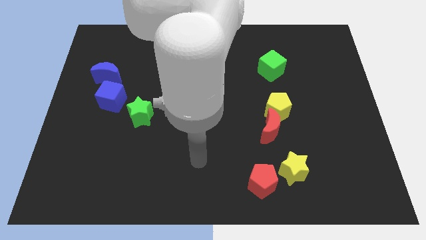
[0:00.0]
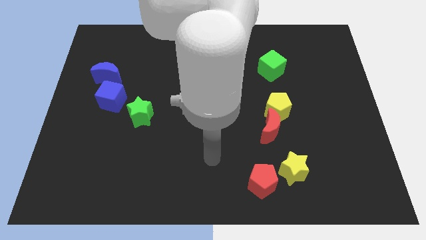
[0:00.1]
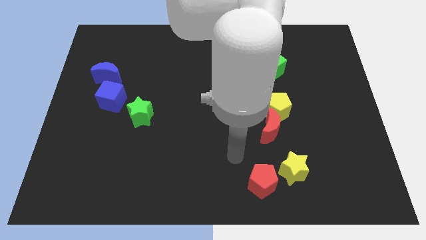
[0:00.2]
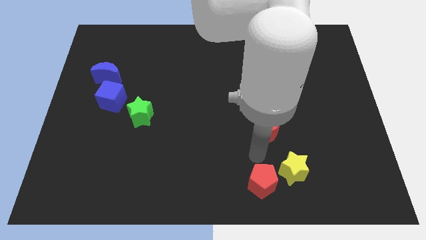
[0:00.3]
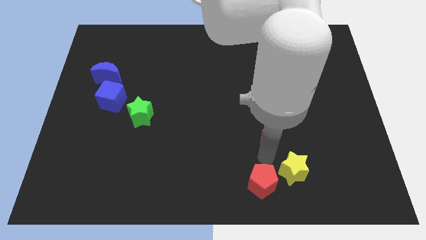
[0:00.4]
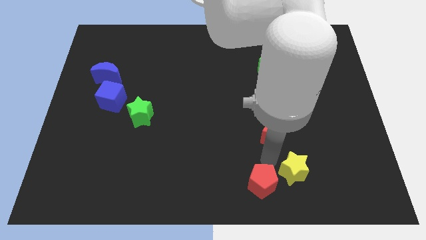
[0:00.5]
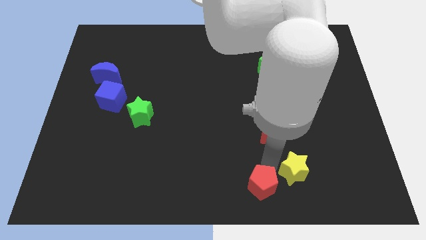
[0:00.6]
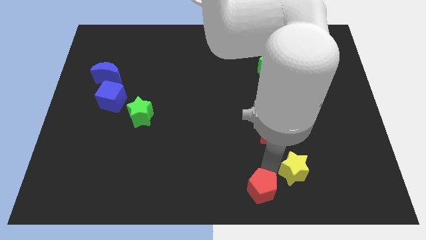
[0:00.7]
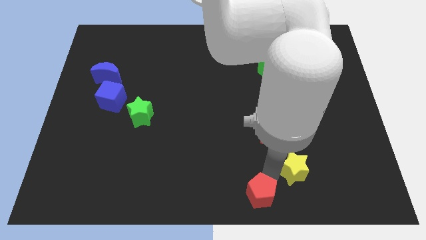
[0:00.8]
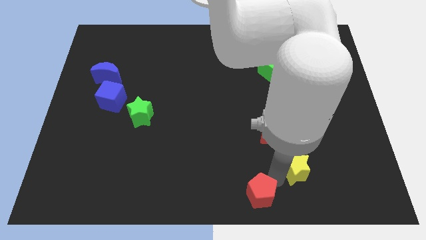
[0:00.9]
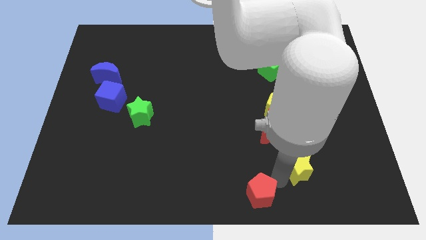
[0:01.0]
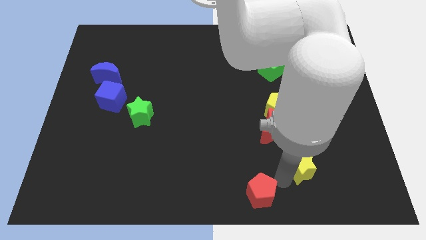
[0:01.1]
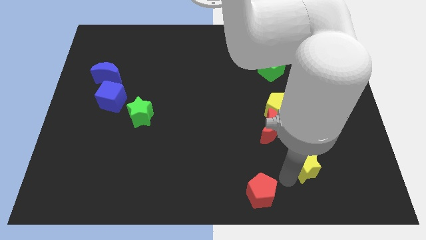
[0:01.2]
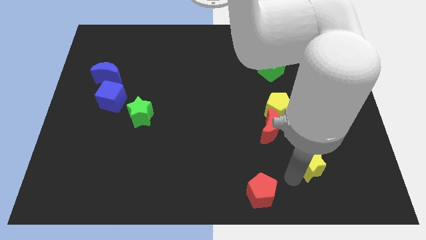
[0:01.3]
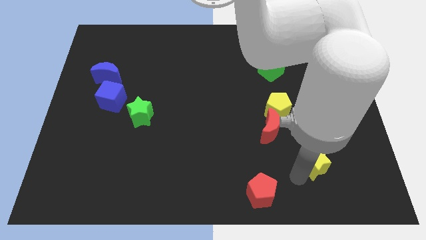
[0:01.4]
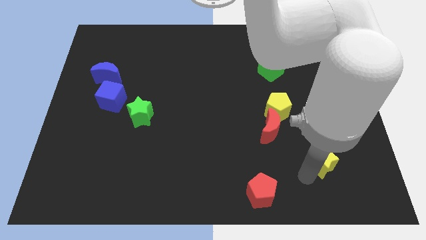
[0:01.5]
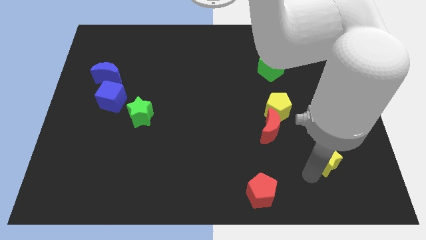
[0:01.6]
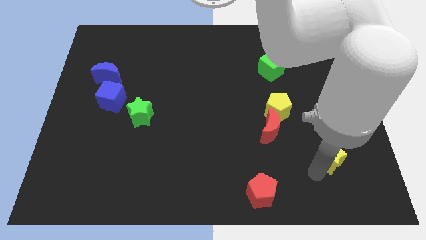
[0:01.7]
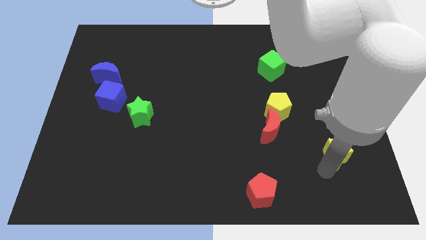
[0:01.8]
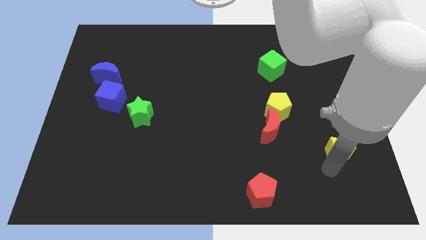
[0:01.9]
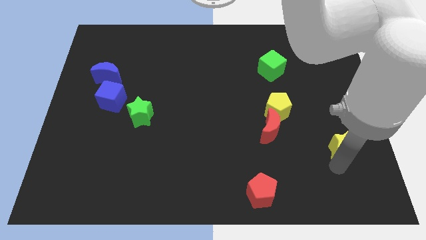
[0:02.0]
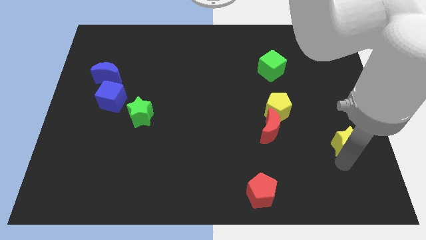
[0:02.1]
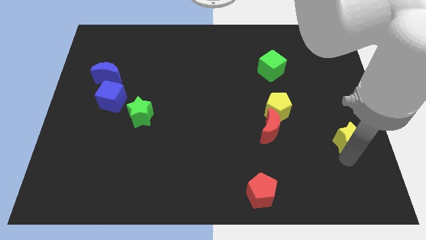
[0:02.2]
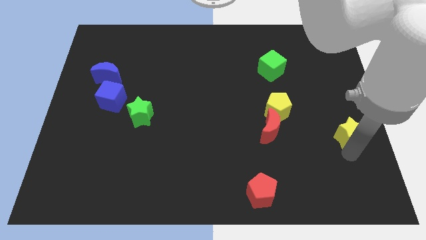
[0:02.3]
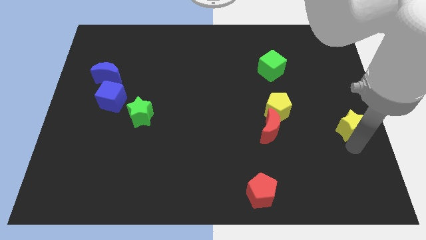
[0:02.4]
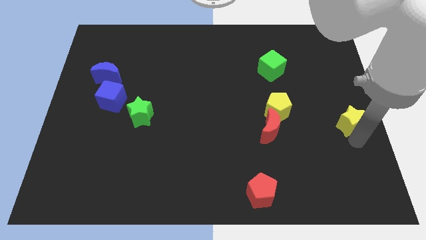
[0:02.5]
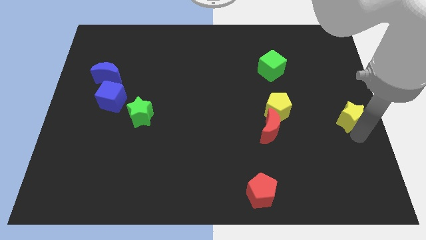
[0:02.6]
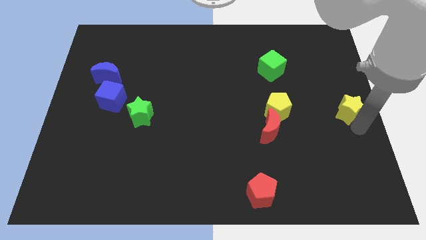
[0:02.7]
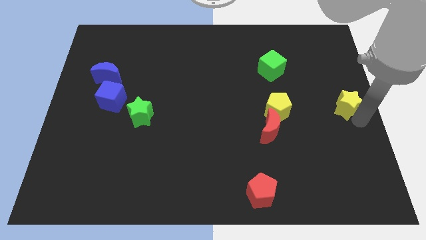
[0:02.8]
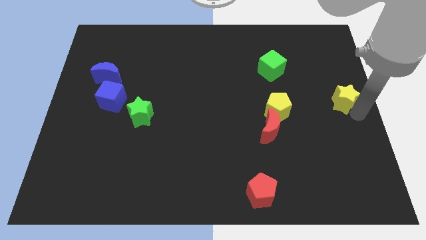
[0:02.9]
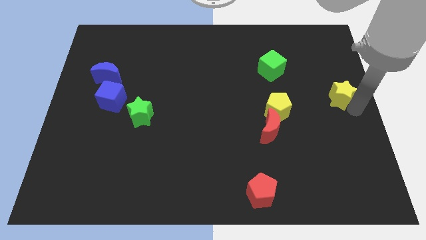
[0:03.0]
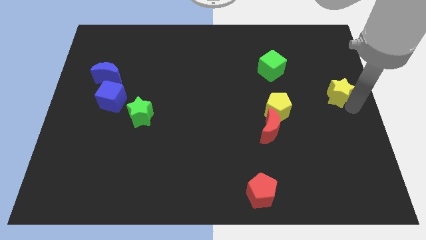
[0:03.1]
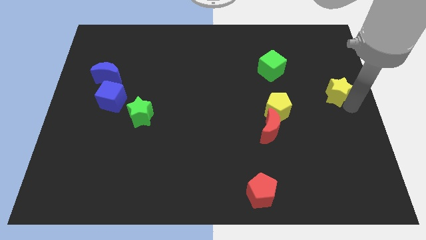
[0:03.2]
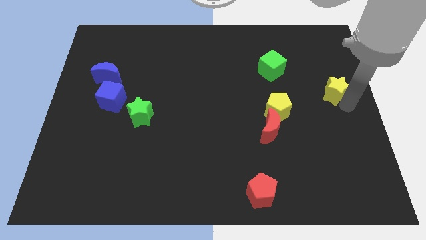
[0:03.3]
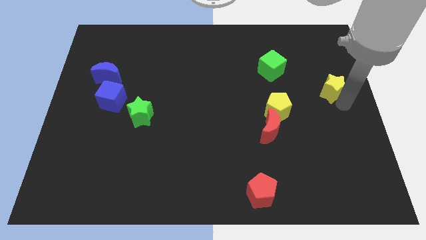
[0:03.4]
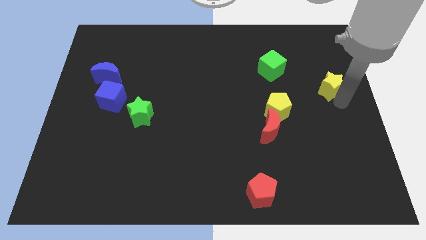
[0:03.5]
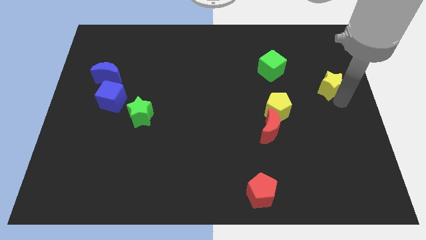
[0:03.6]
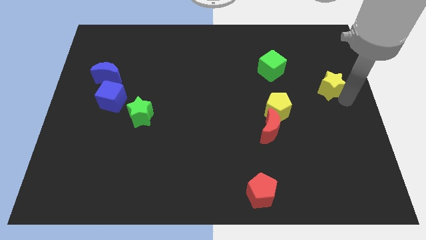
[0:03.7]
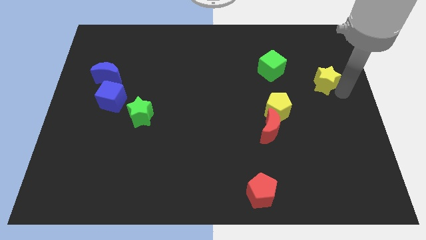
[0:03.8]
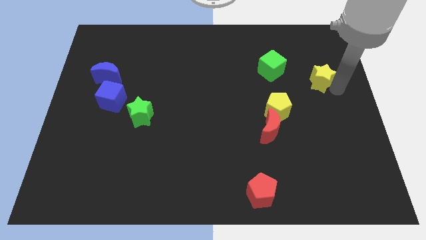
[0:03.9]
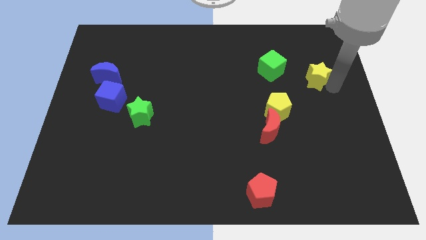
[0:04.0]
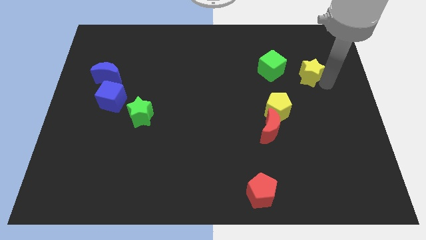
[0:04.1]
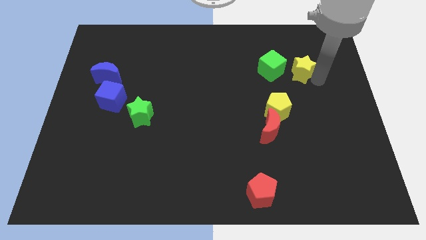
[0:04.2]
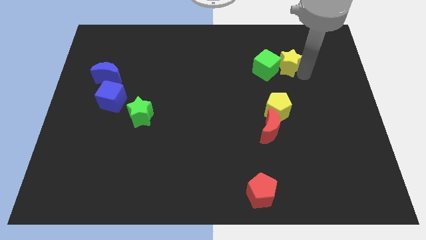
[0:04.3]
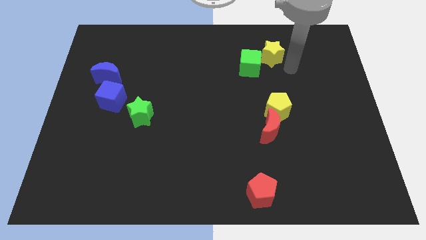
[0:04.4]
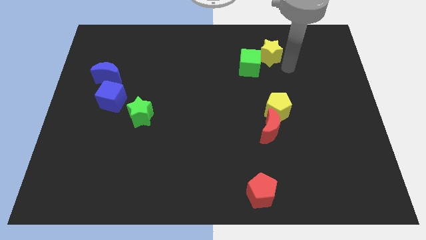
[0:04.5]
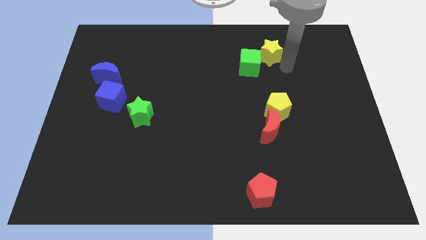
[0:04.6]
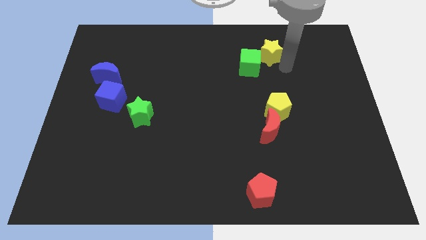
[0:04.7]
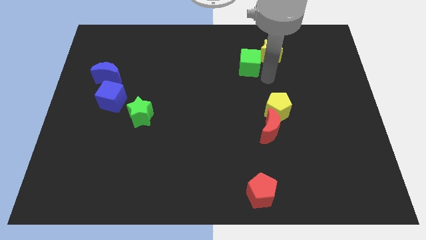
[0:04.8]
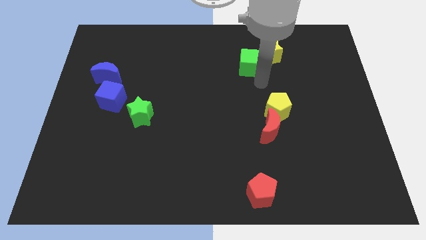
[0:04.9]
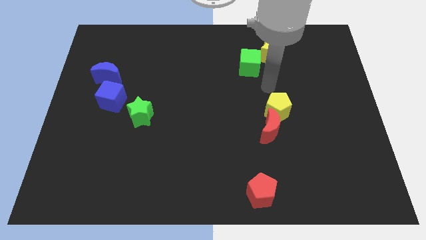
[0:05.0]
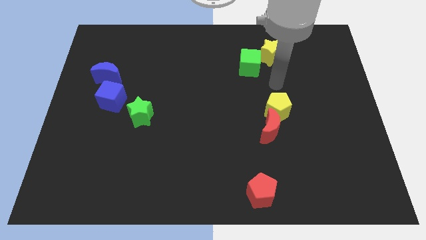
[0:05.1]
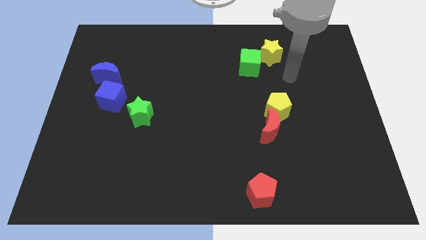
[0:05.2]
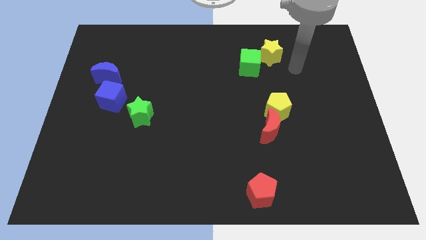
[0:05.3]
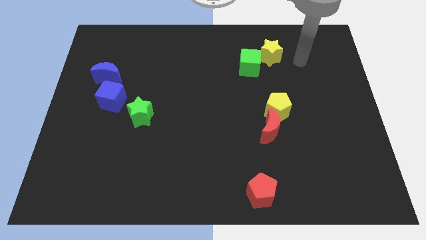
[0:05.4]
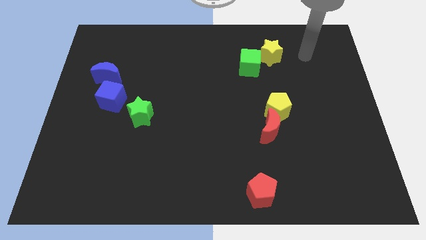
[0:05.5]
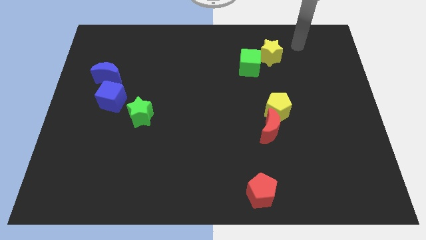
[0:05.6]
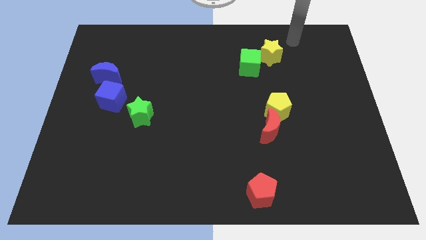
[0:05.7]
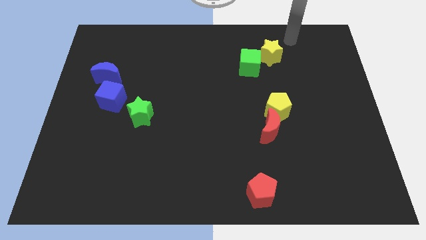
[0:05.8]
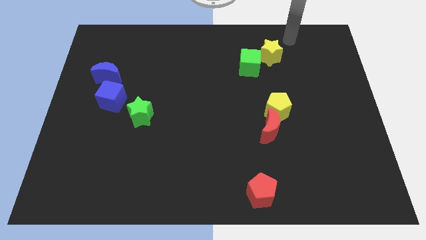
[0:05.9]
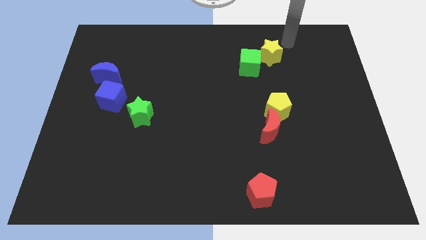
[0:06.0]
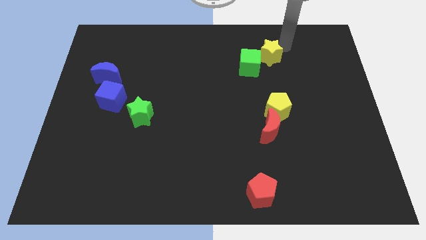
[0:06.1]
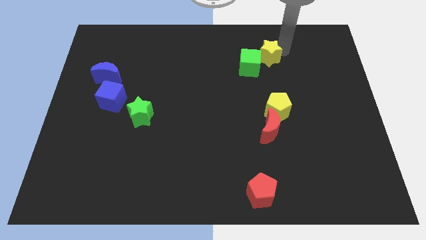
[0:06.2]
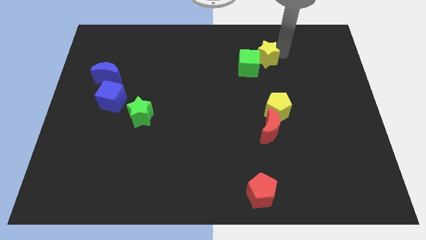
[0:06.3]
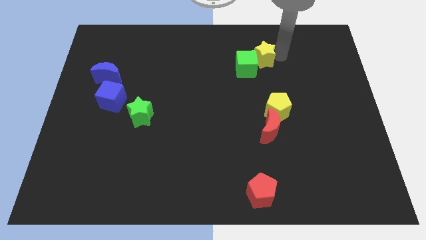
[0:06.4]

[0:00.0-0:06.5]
put the yellow star to the green cube

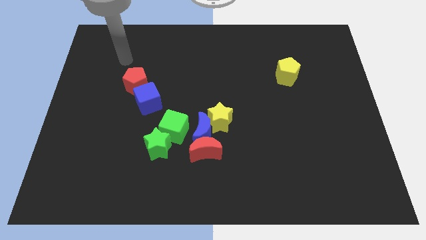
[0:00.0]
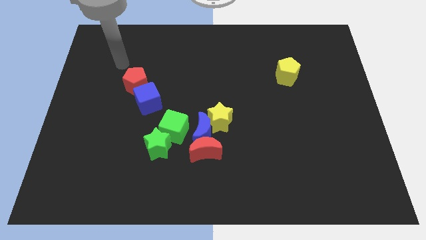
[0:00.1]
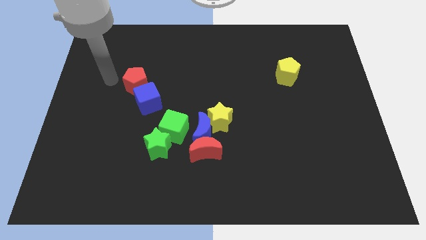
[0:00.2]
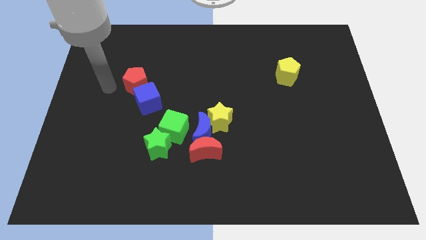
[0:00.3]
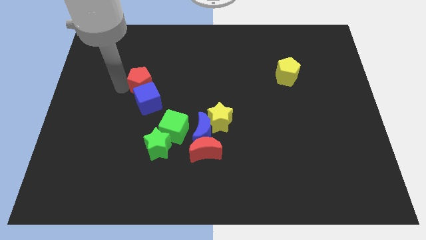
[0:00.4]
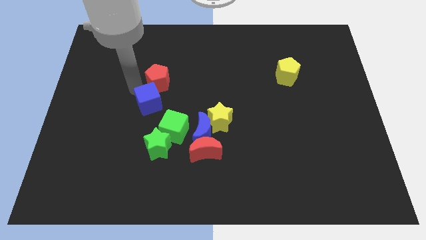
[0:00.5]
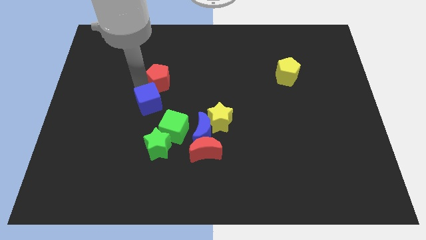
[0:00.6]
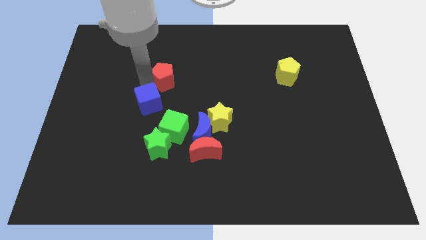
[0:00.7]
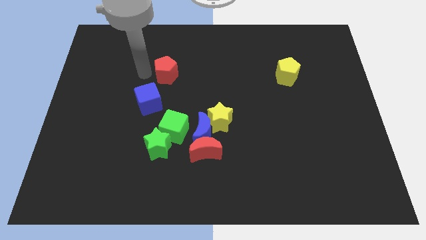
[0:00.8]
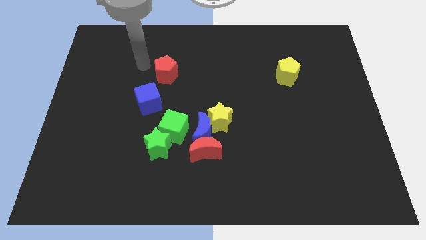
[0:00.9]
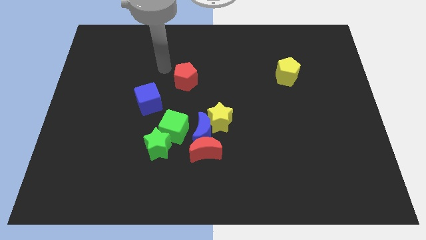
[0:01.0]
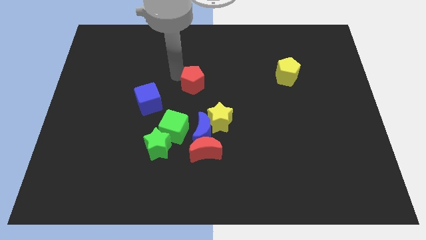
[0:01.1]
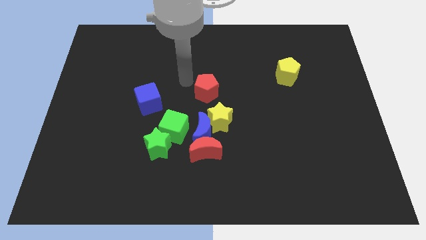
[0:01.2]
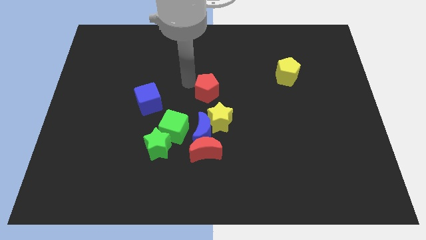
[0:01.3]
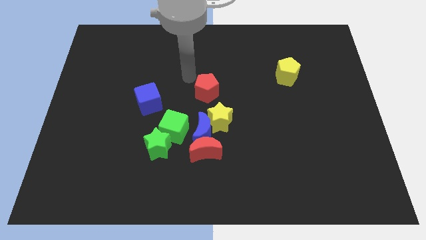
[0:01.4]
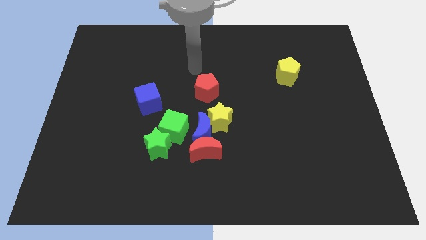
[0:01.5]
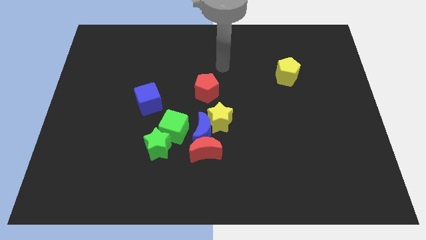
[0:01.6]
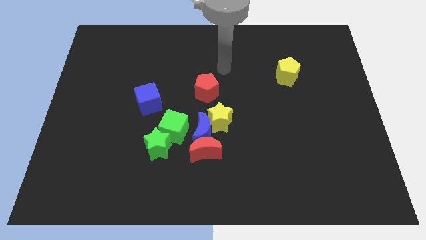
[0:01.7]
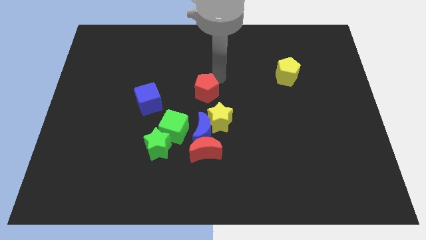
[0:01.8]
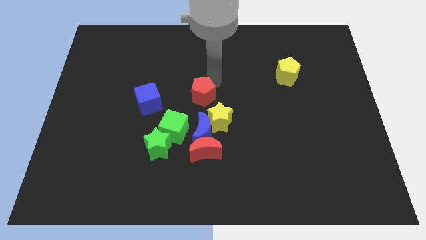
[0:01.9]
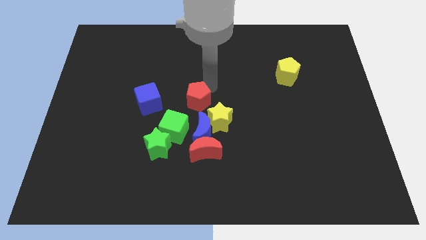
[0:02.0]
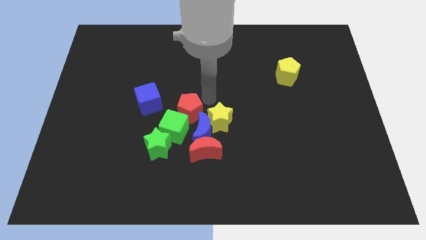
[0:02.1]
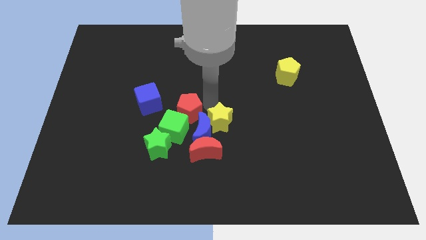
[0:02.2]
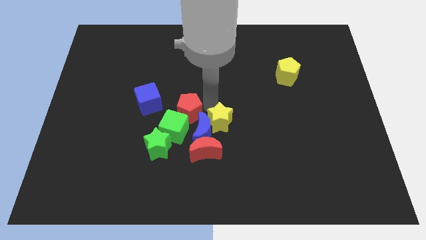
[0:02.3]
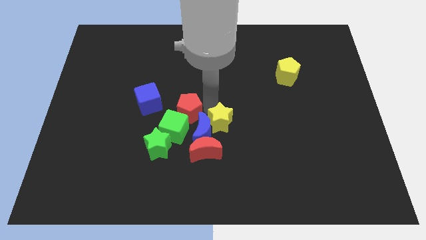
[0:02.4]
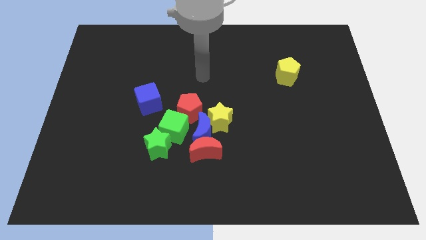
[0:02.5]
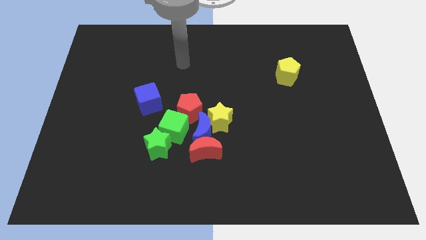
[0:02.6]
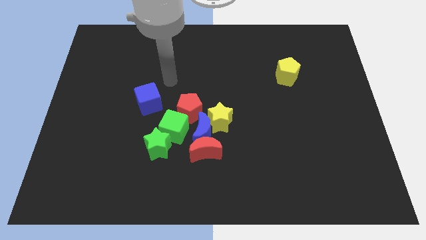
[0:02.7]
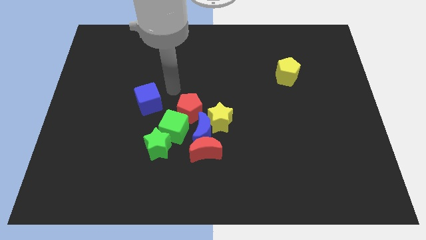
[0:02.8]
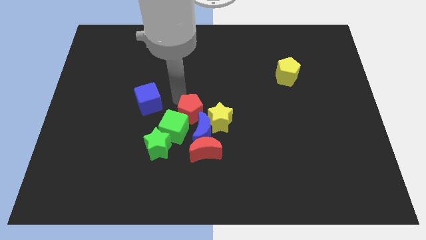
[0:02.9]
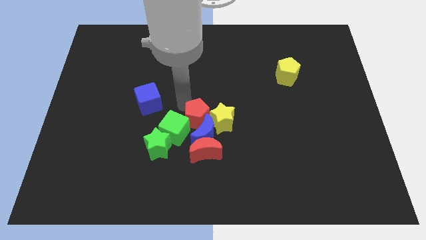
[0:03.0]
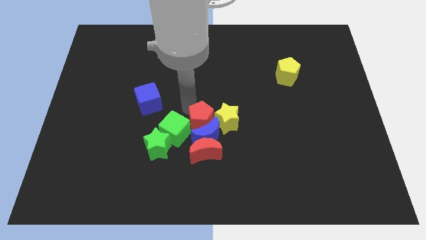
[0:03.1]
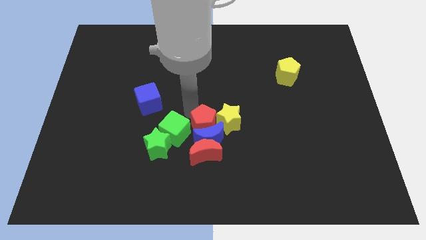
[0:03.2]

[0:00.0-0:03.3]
push the red pentagon to the blue moon
